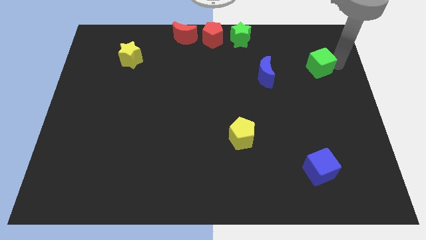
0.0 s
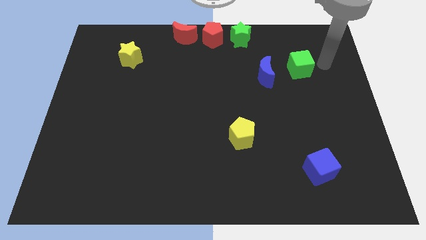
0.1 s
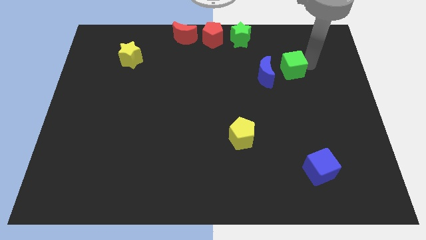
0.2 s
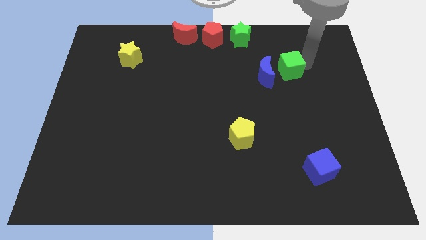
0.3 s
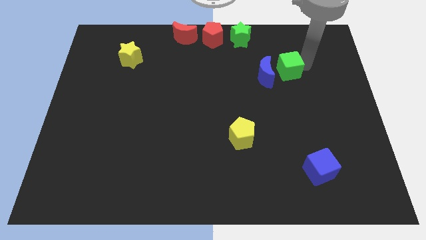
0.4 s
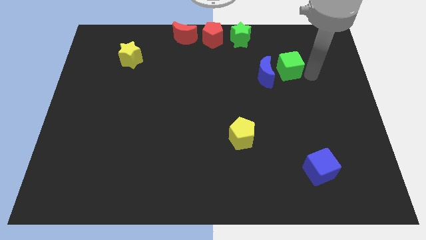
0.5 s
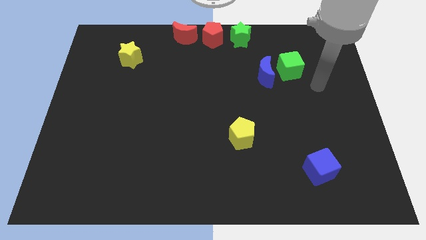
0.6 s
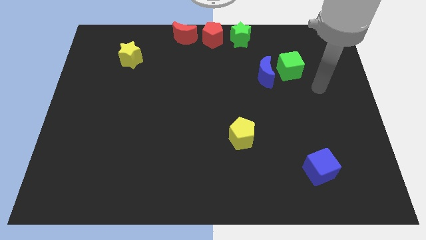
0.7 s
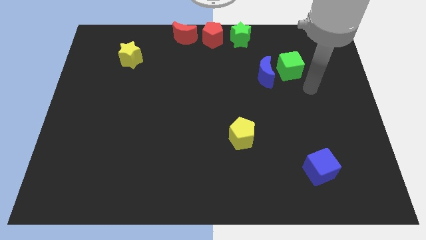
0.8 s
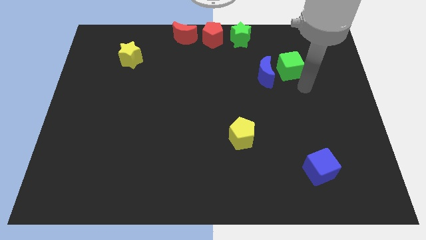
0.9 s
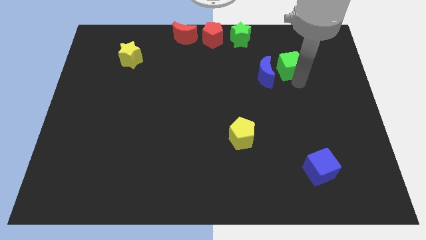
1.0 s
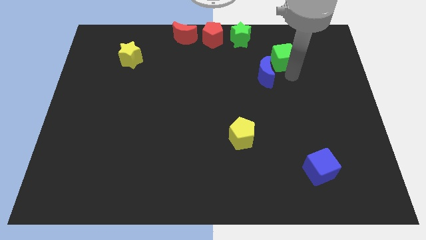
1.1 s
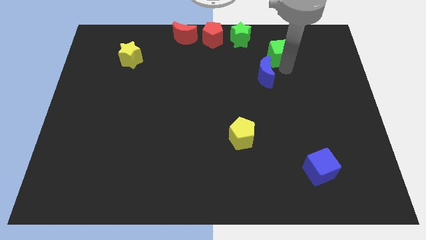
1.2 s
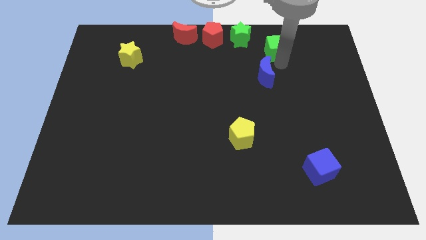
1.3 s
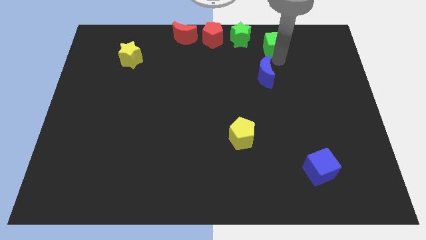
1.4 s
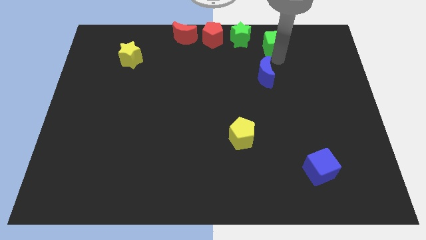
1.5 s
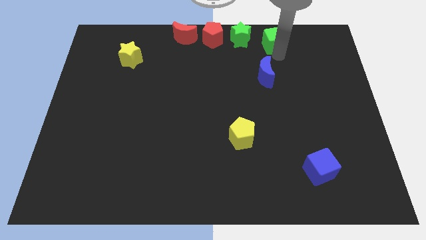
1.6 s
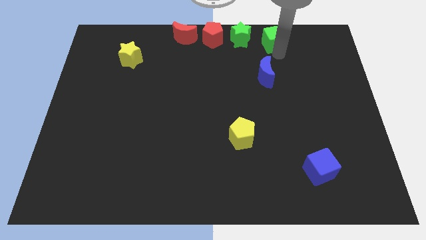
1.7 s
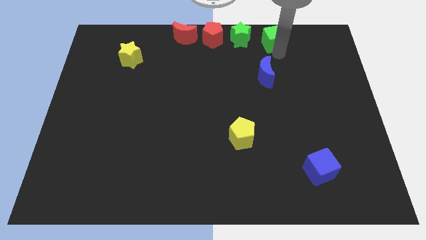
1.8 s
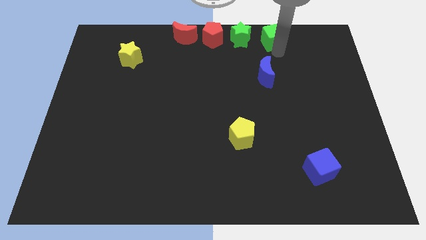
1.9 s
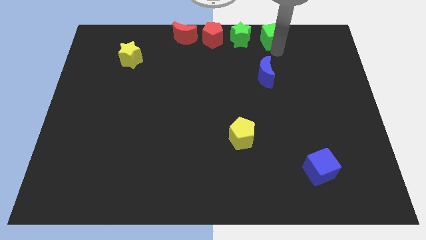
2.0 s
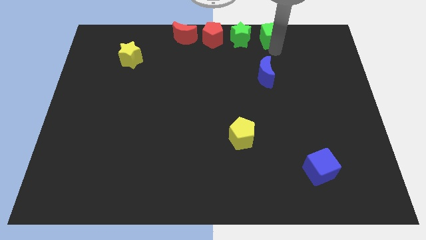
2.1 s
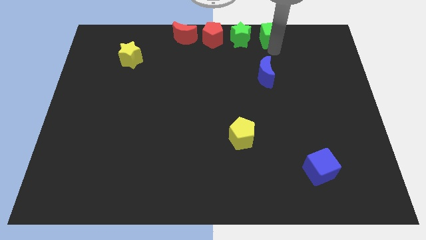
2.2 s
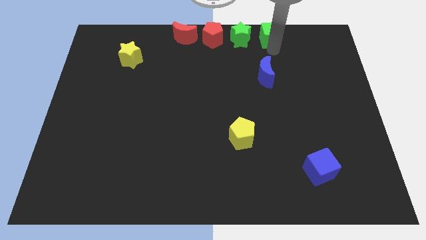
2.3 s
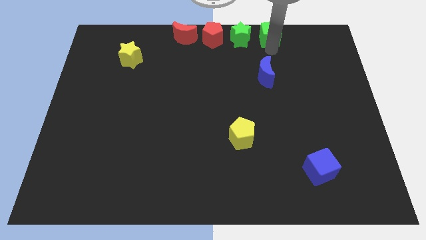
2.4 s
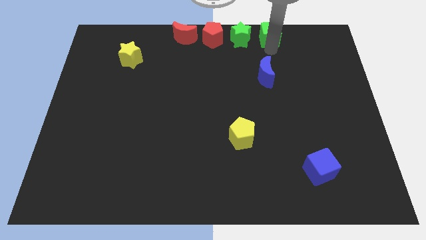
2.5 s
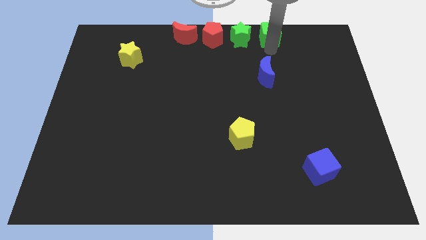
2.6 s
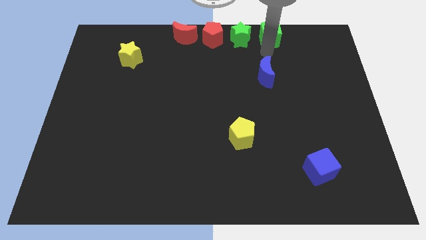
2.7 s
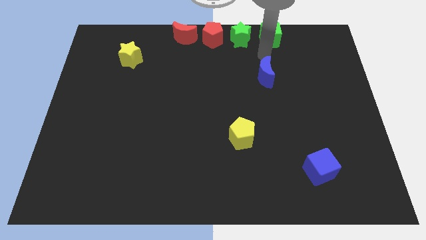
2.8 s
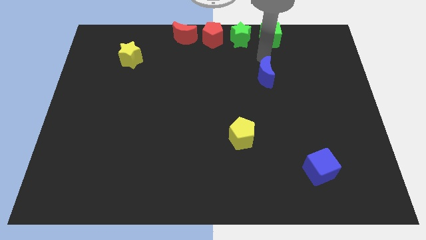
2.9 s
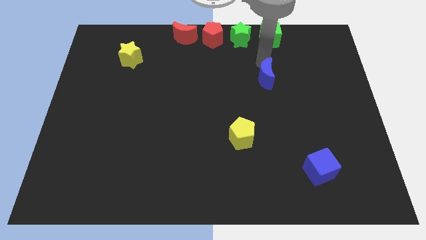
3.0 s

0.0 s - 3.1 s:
move green cube vertically above blue crescent

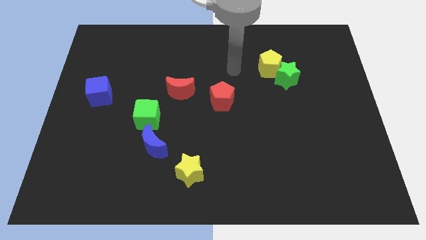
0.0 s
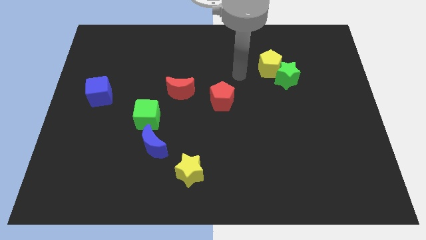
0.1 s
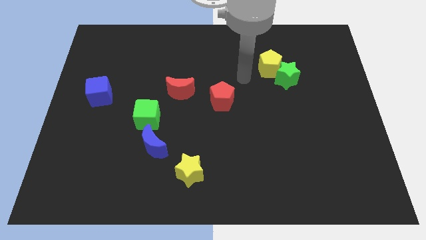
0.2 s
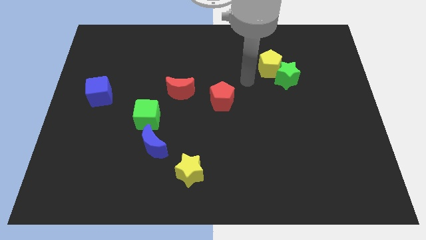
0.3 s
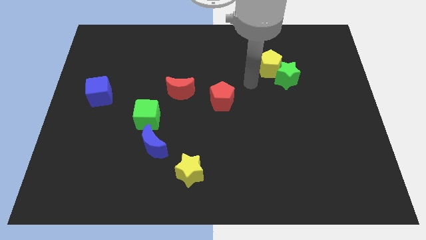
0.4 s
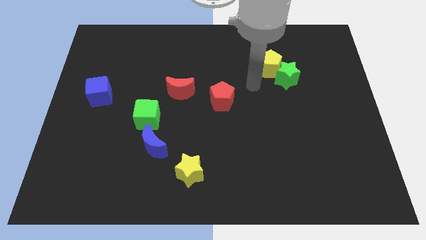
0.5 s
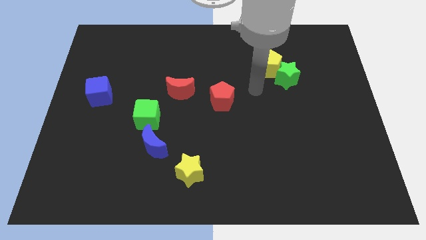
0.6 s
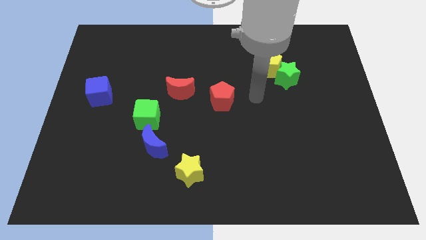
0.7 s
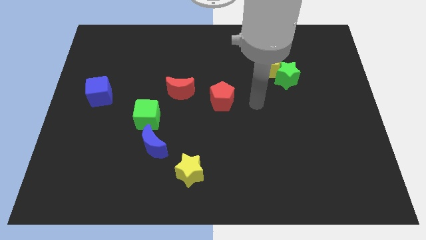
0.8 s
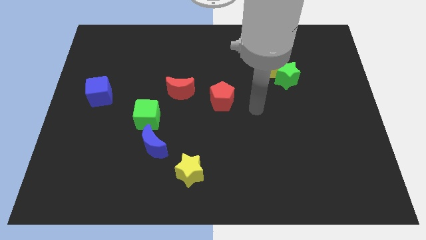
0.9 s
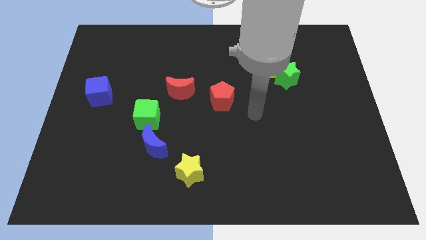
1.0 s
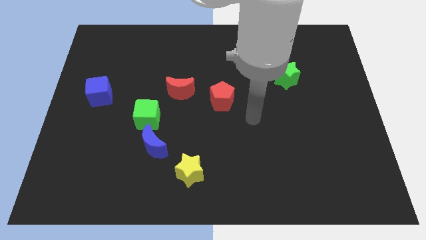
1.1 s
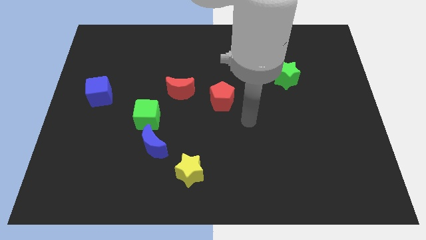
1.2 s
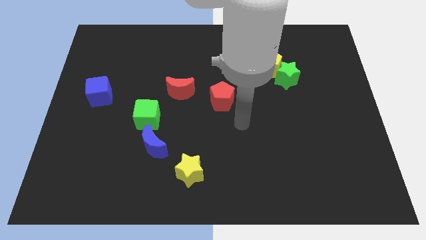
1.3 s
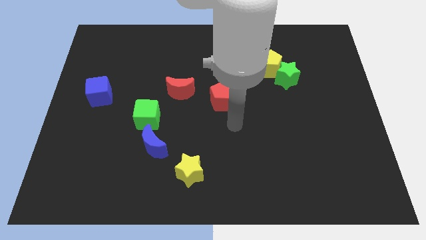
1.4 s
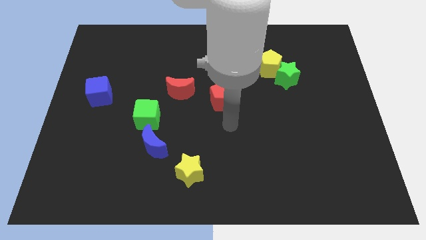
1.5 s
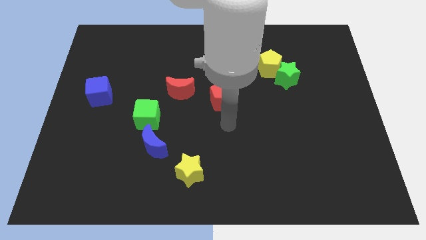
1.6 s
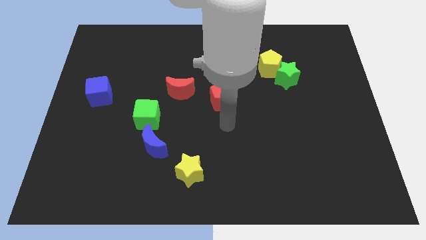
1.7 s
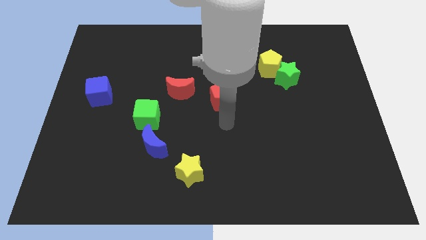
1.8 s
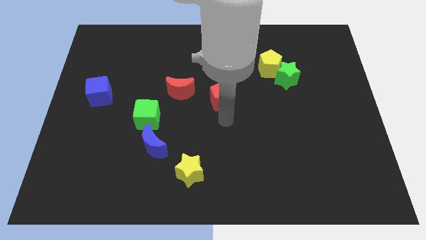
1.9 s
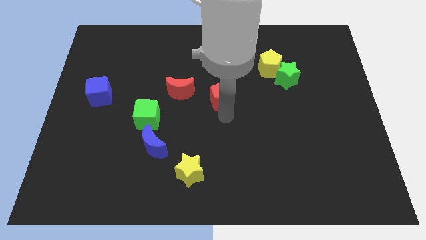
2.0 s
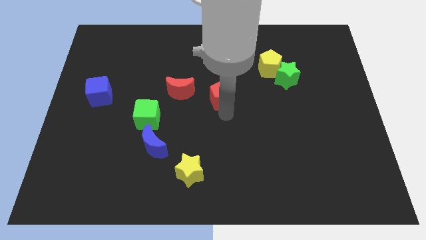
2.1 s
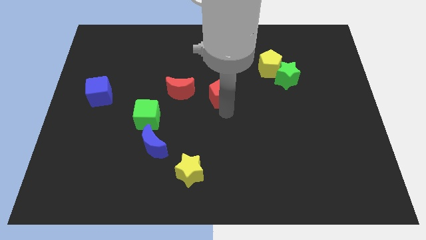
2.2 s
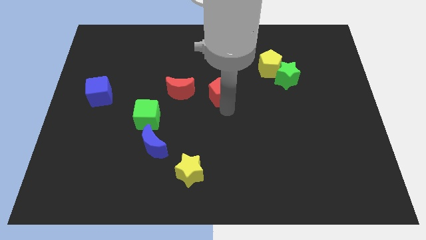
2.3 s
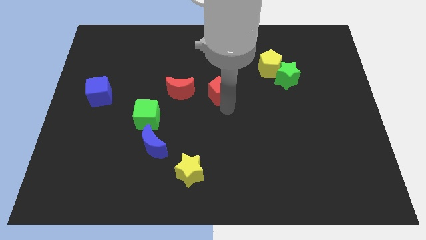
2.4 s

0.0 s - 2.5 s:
push the red pentagon slightly to the top center

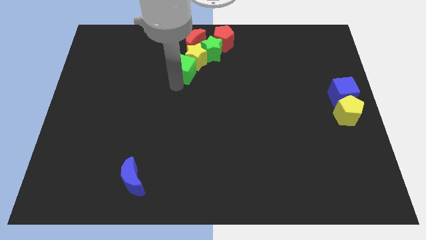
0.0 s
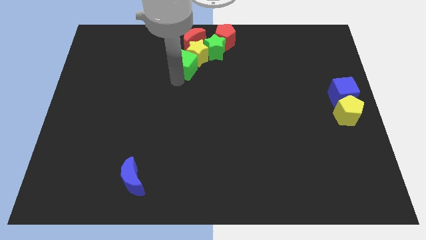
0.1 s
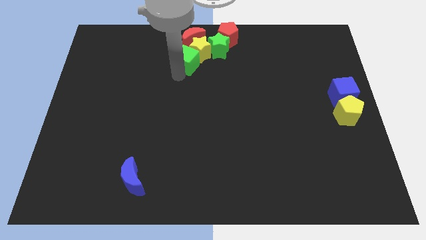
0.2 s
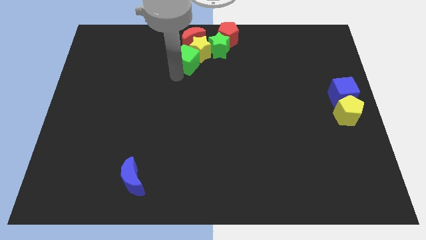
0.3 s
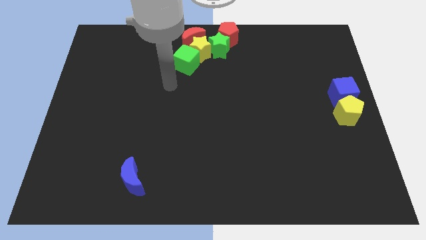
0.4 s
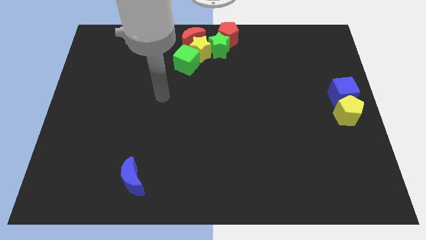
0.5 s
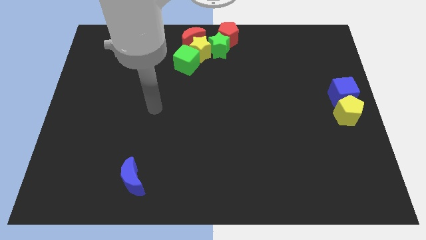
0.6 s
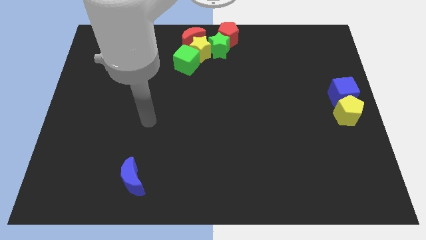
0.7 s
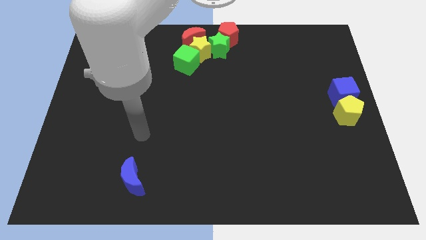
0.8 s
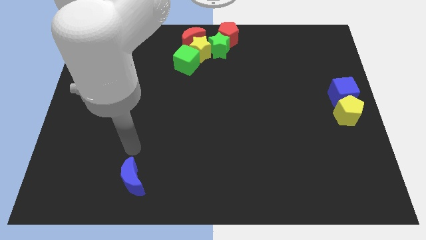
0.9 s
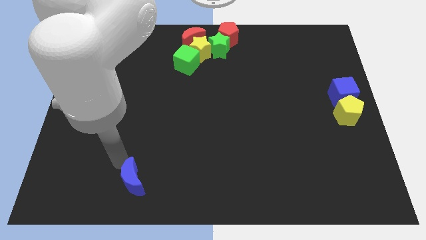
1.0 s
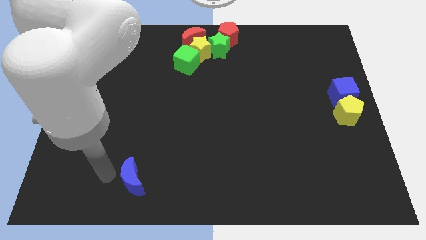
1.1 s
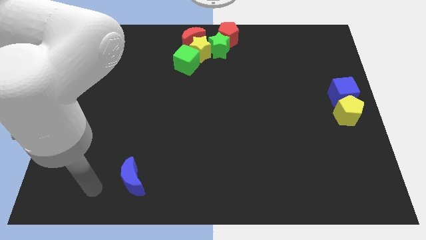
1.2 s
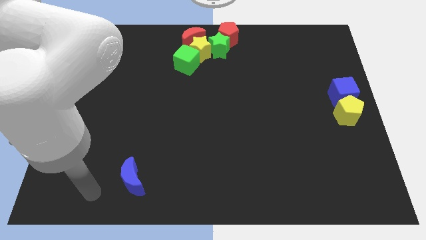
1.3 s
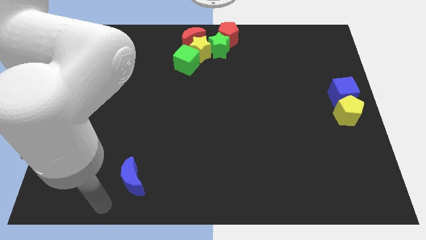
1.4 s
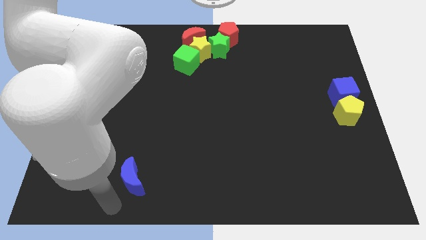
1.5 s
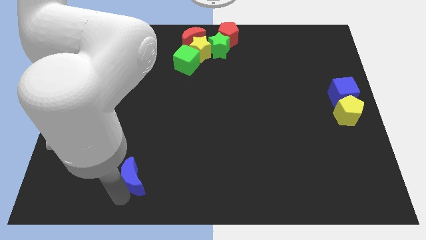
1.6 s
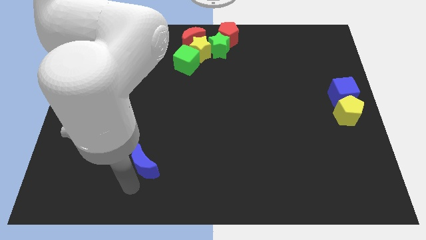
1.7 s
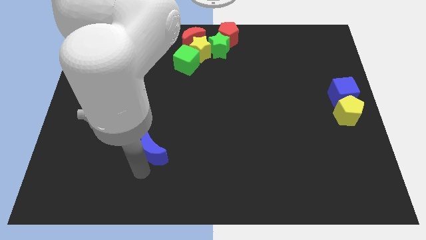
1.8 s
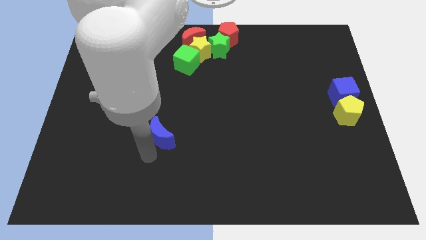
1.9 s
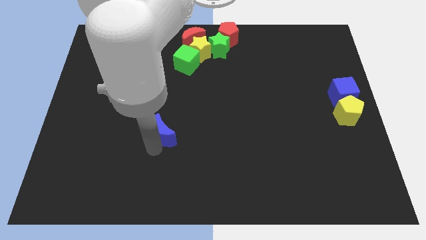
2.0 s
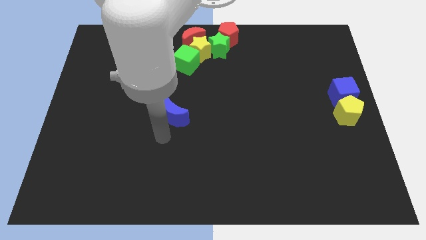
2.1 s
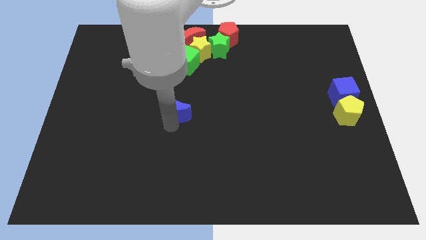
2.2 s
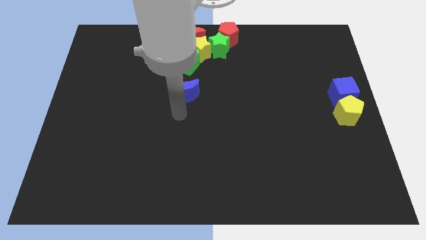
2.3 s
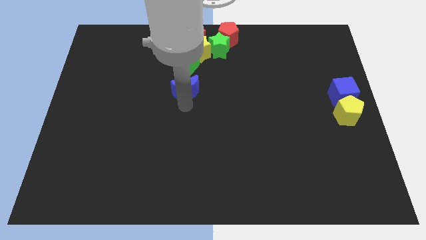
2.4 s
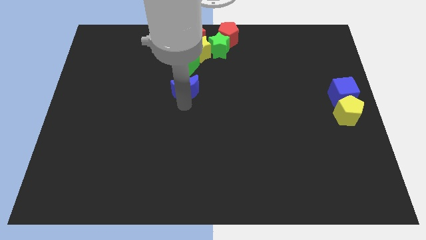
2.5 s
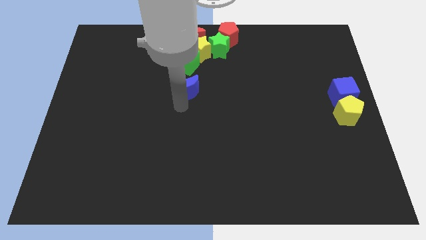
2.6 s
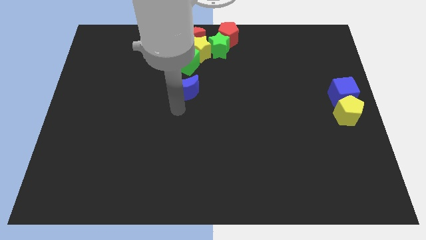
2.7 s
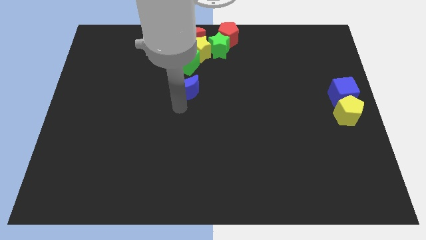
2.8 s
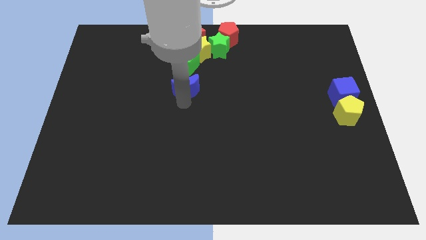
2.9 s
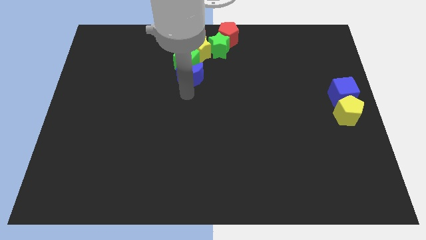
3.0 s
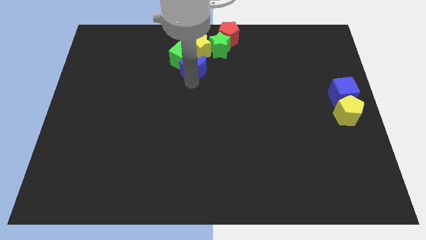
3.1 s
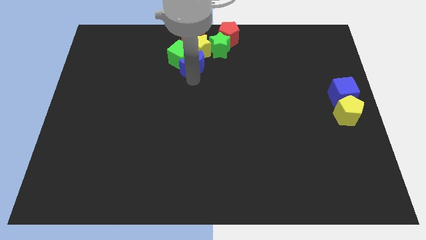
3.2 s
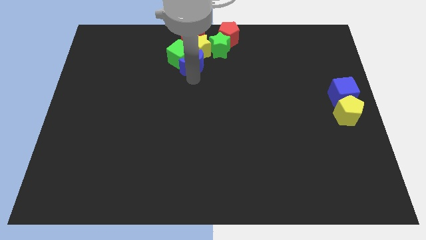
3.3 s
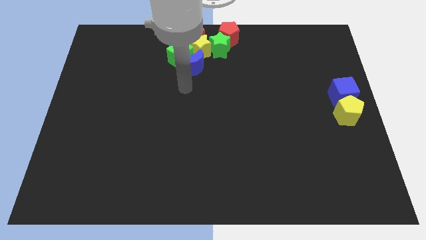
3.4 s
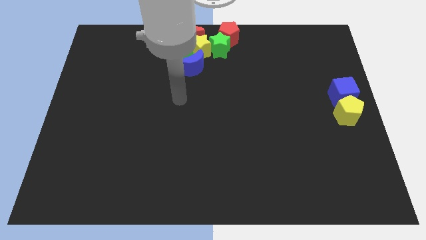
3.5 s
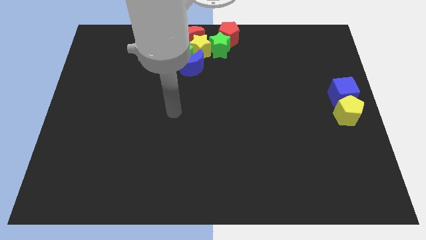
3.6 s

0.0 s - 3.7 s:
push the blue crescent into the group of blocks
